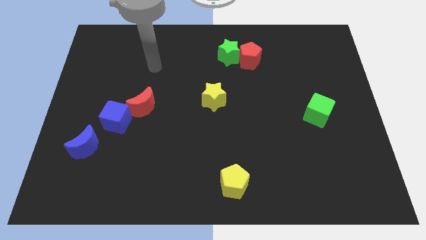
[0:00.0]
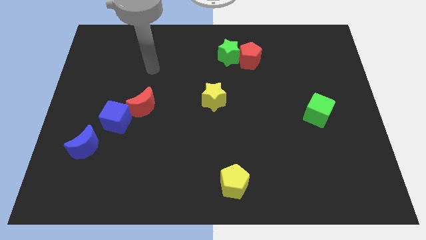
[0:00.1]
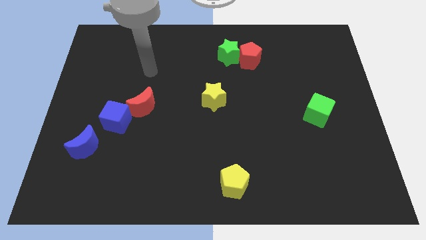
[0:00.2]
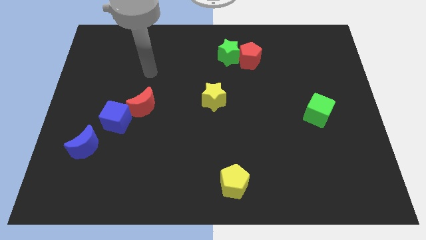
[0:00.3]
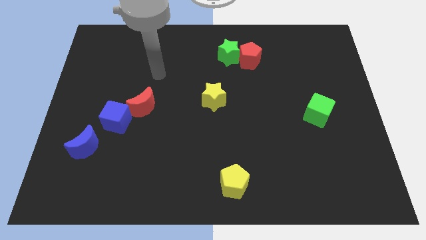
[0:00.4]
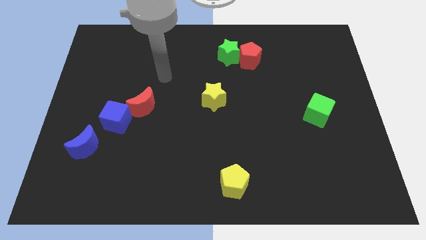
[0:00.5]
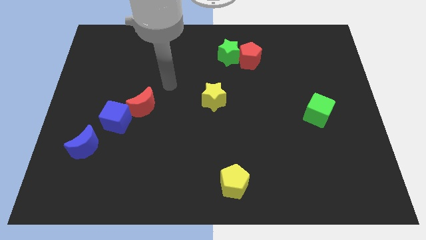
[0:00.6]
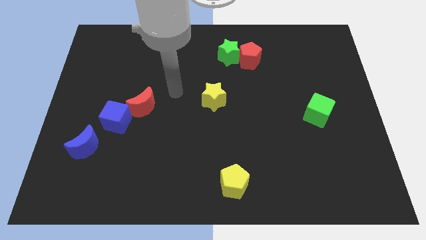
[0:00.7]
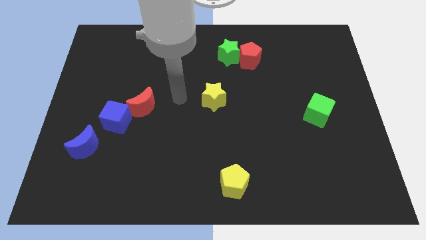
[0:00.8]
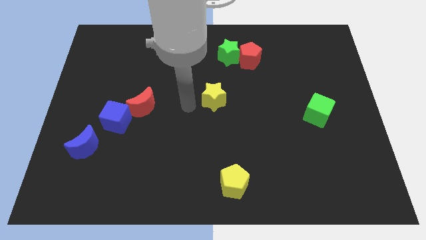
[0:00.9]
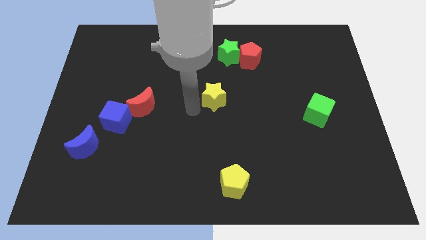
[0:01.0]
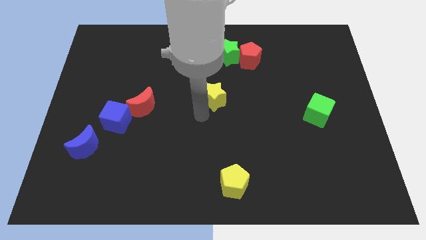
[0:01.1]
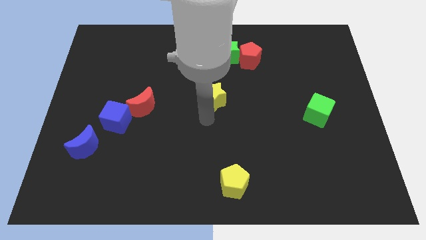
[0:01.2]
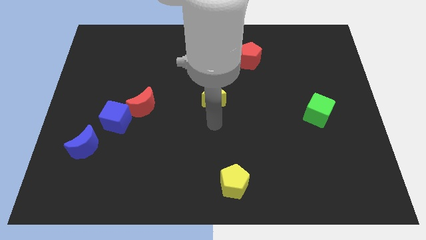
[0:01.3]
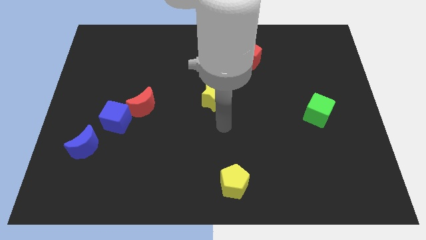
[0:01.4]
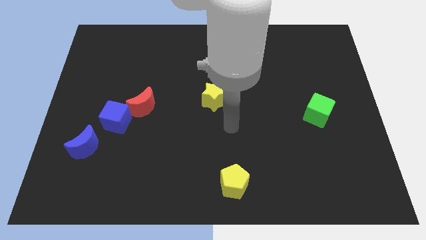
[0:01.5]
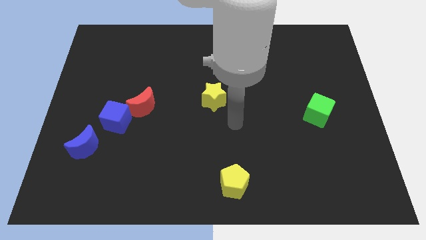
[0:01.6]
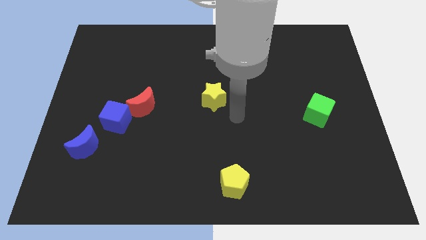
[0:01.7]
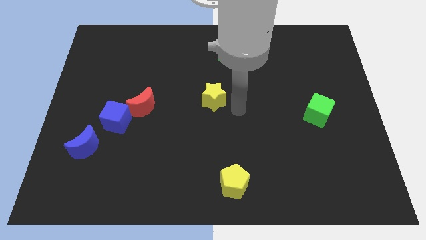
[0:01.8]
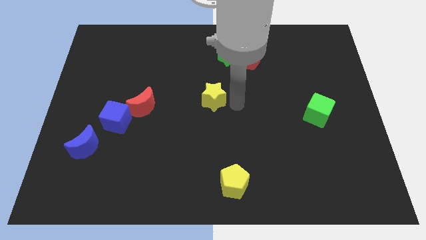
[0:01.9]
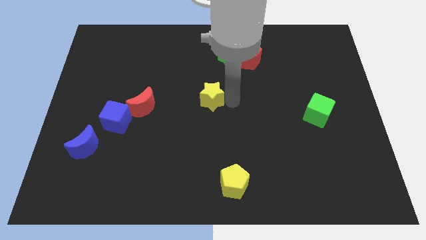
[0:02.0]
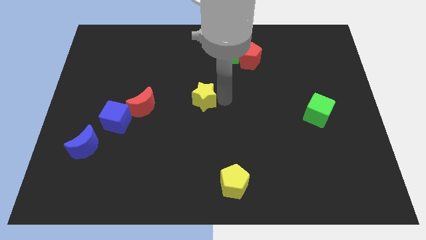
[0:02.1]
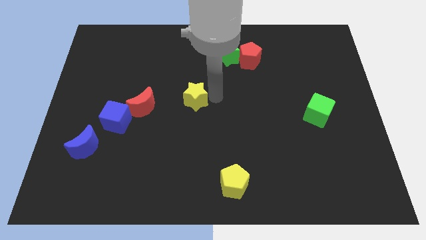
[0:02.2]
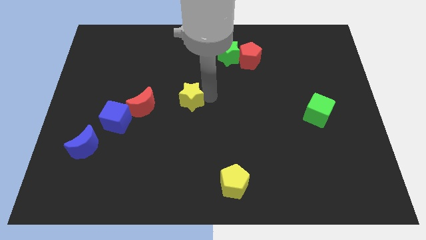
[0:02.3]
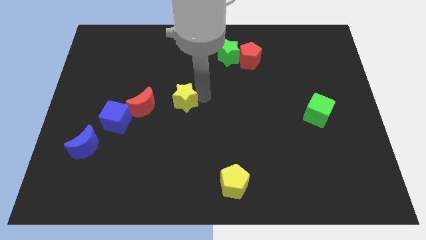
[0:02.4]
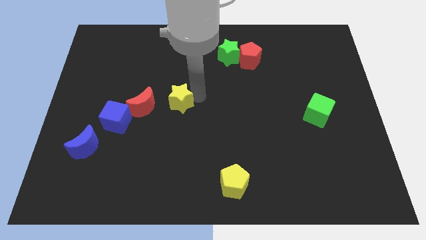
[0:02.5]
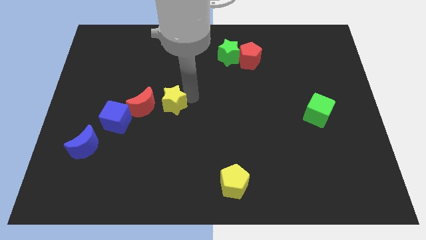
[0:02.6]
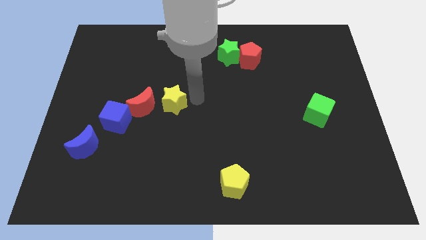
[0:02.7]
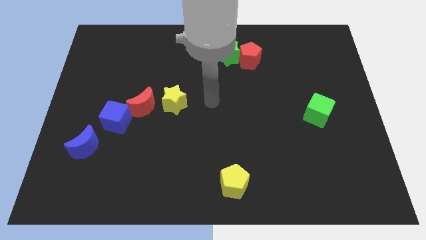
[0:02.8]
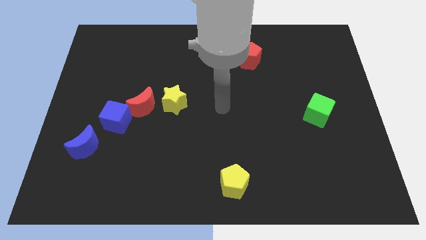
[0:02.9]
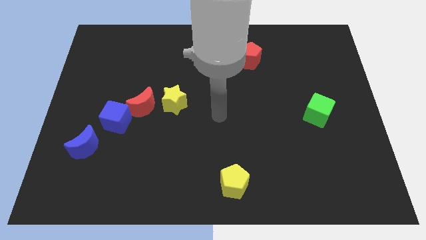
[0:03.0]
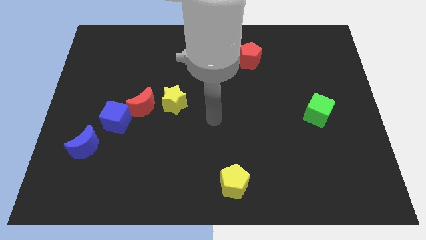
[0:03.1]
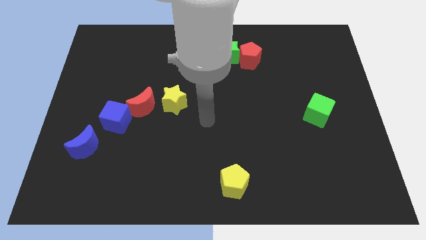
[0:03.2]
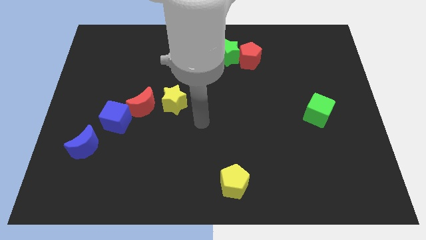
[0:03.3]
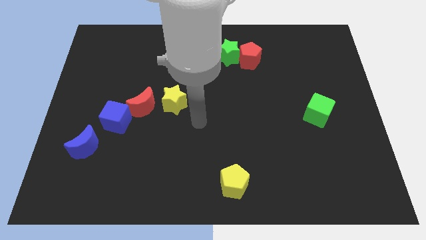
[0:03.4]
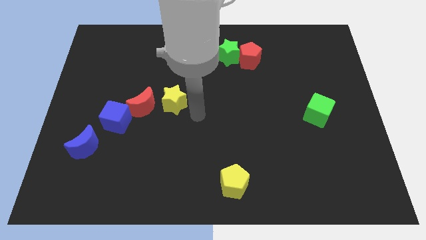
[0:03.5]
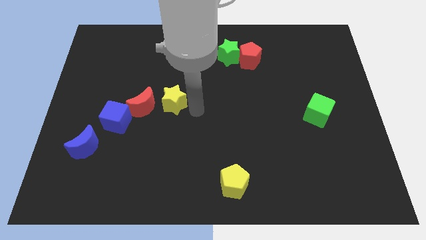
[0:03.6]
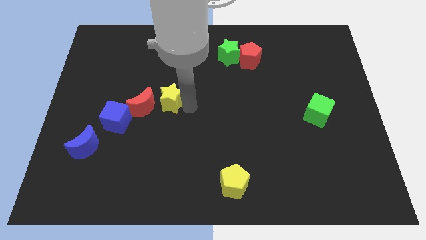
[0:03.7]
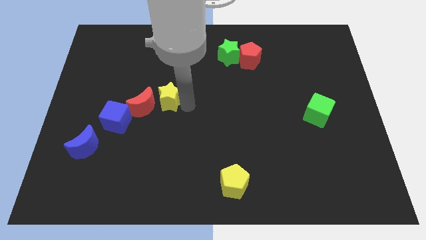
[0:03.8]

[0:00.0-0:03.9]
place the yellow star at the top right side of red moon

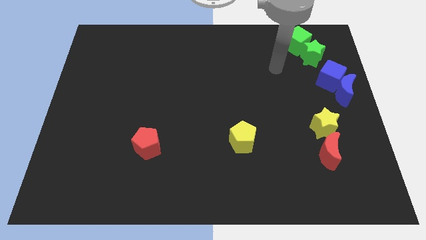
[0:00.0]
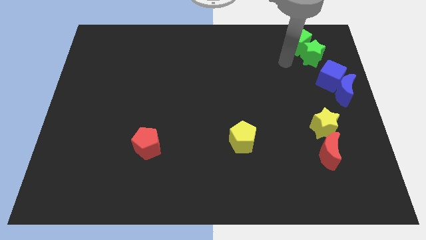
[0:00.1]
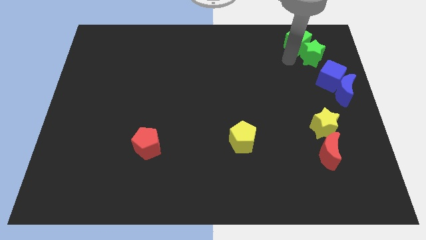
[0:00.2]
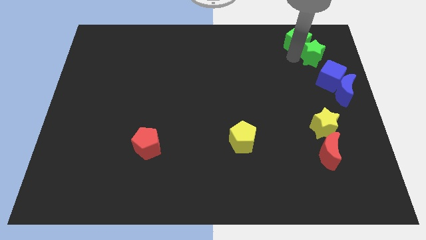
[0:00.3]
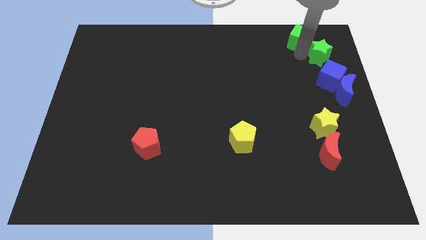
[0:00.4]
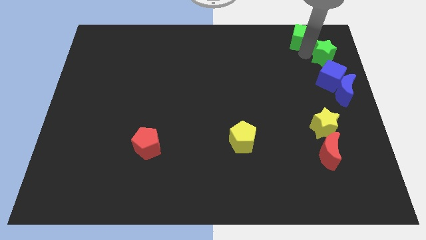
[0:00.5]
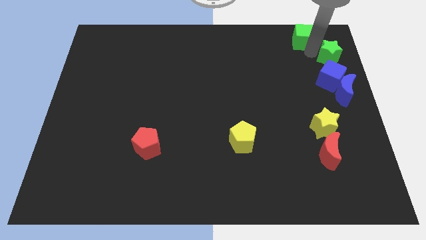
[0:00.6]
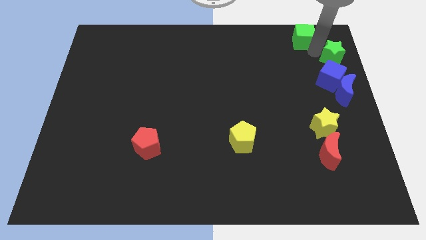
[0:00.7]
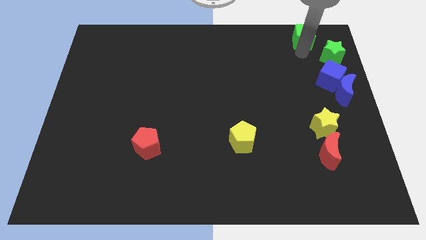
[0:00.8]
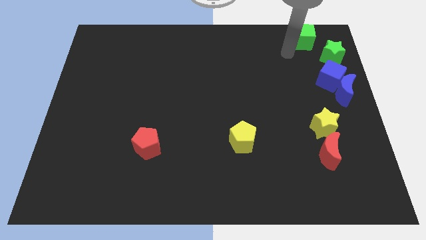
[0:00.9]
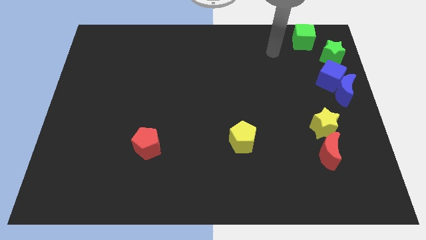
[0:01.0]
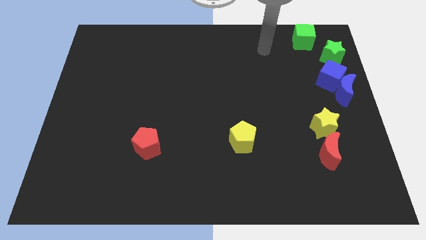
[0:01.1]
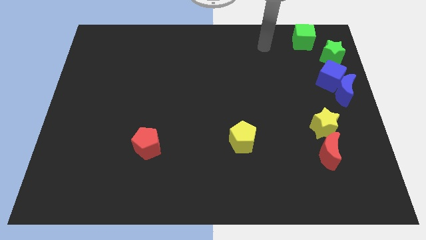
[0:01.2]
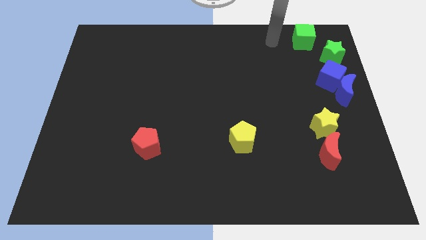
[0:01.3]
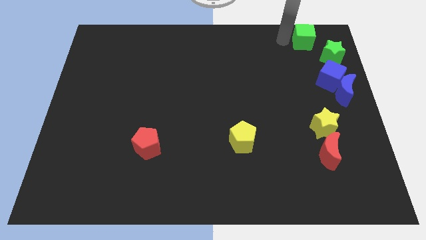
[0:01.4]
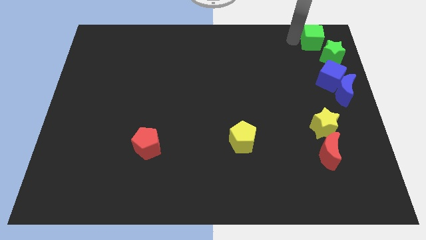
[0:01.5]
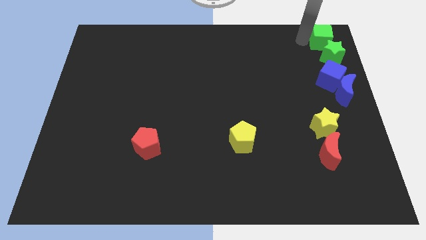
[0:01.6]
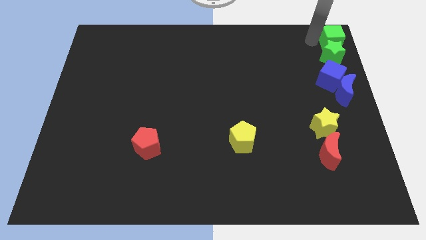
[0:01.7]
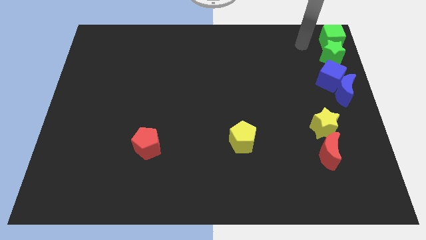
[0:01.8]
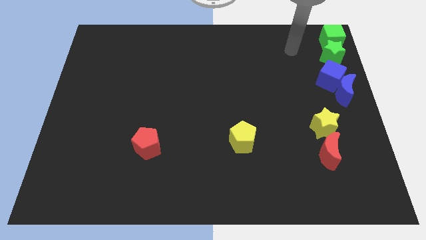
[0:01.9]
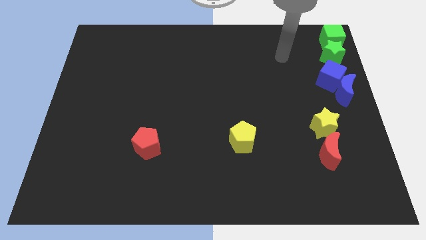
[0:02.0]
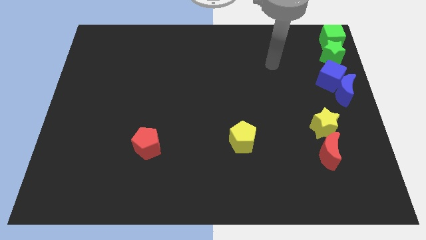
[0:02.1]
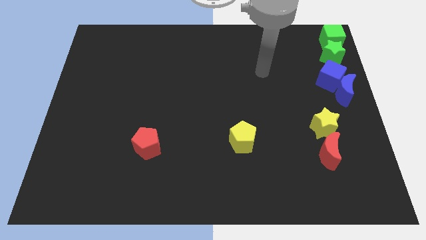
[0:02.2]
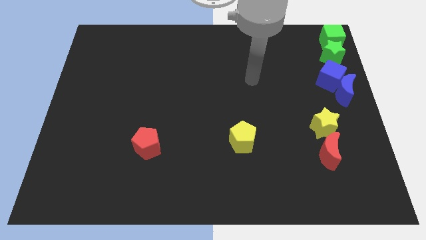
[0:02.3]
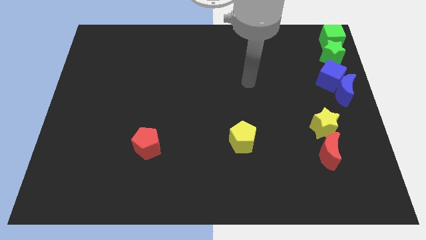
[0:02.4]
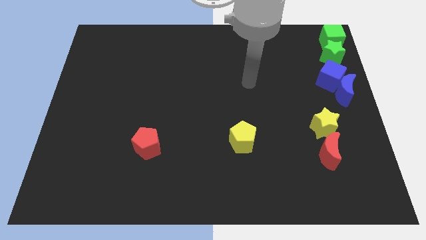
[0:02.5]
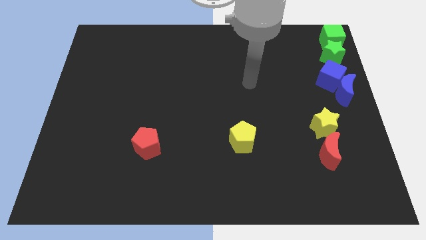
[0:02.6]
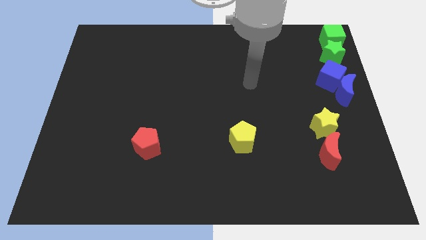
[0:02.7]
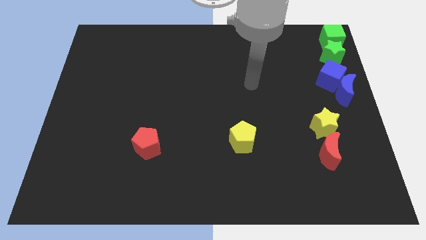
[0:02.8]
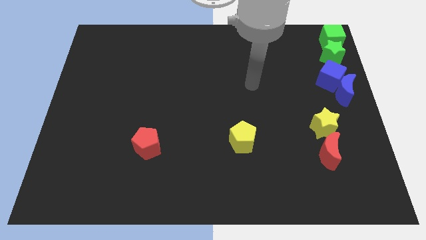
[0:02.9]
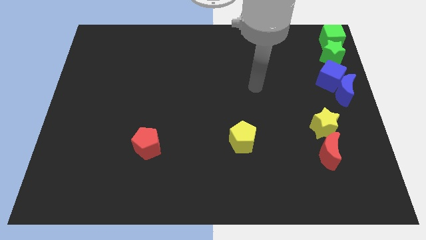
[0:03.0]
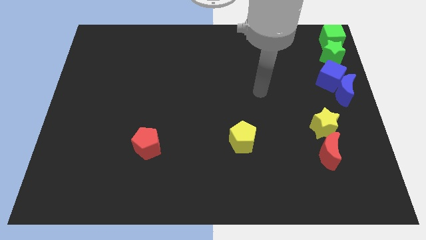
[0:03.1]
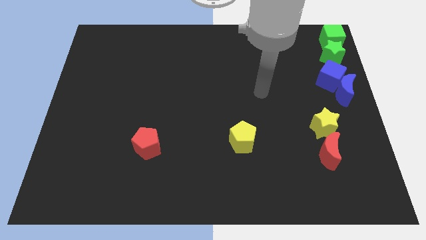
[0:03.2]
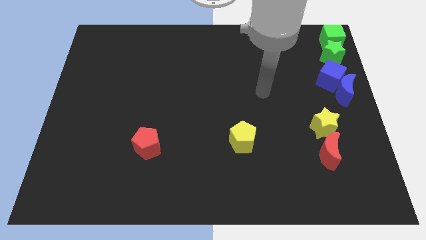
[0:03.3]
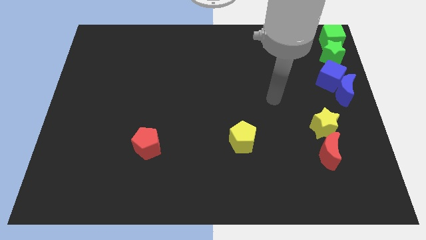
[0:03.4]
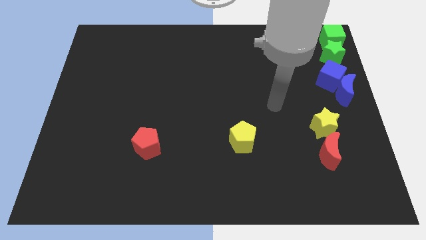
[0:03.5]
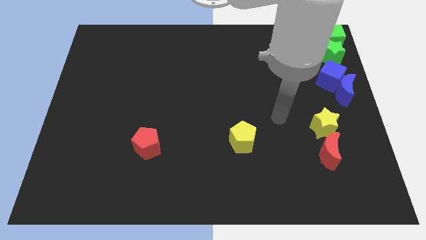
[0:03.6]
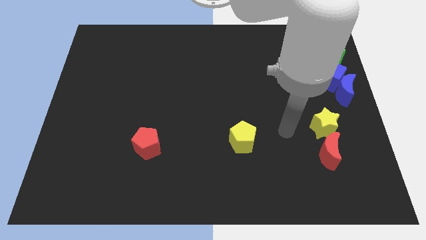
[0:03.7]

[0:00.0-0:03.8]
place both the green blocks at the top right corner of the board

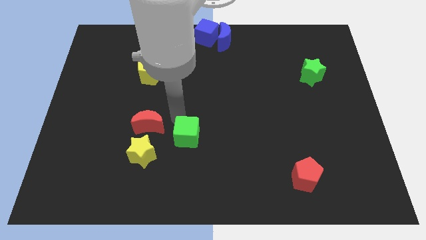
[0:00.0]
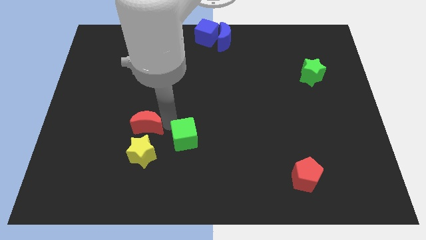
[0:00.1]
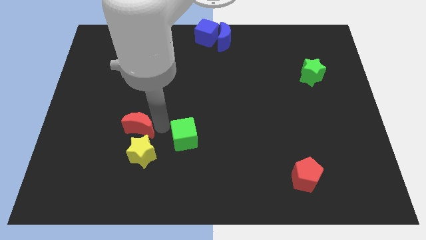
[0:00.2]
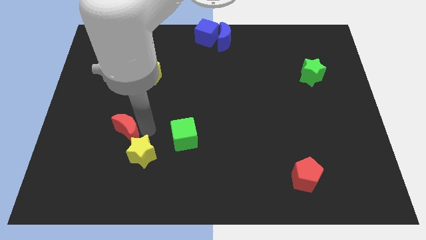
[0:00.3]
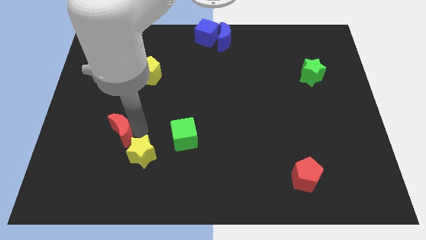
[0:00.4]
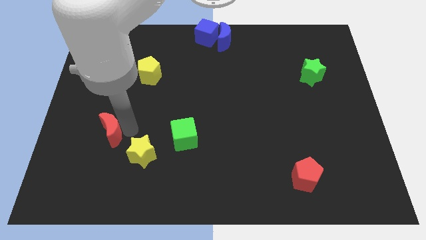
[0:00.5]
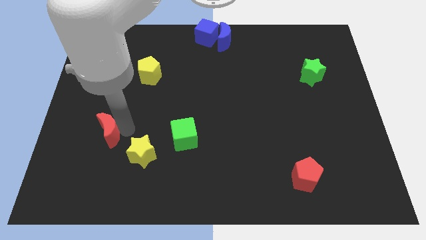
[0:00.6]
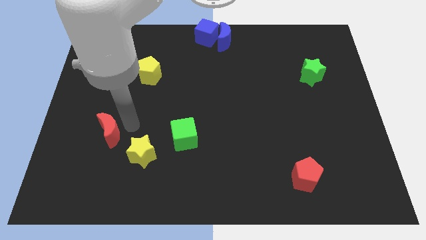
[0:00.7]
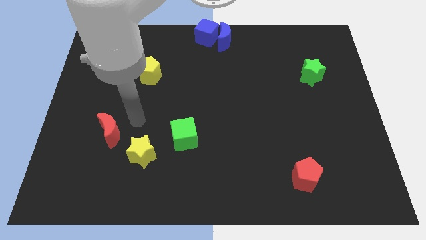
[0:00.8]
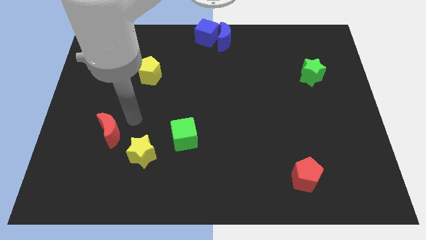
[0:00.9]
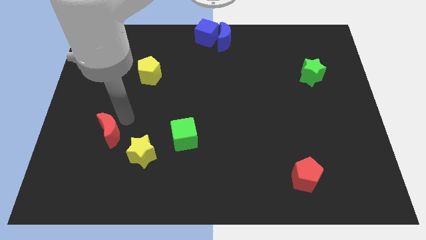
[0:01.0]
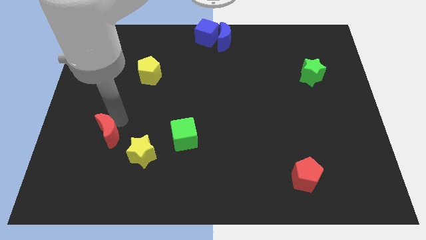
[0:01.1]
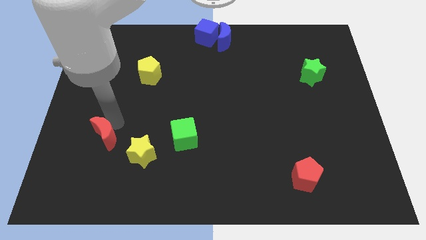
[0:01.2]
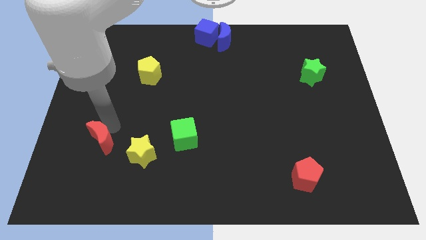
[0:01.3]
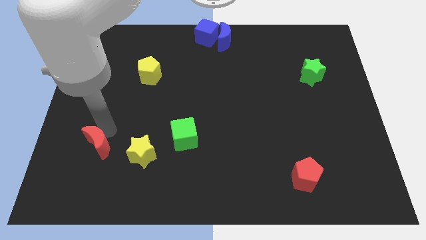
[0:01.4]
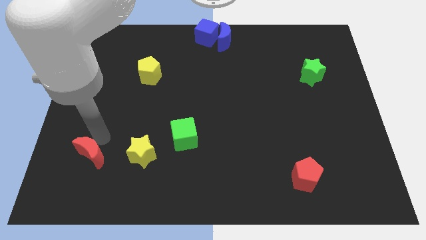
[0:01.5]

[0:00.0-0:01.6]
move the red moon to the left of yellow star
